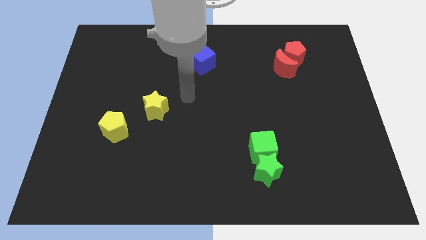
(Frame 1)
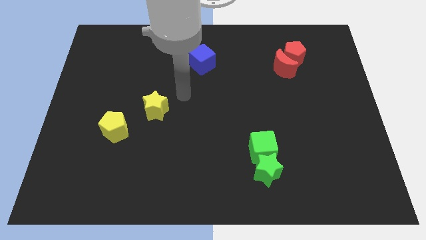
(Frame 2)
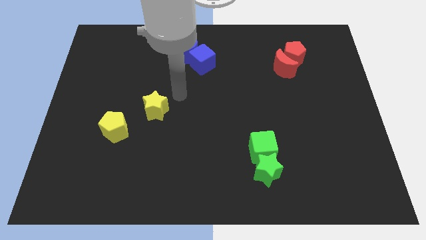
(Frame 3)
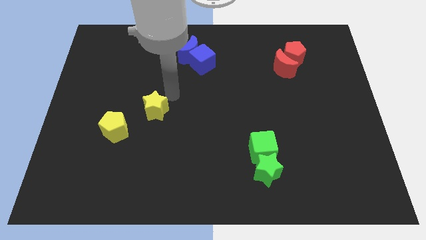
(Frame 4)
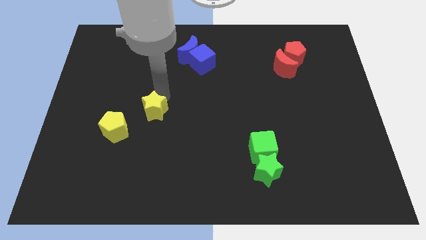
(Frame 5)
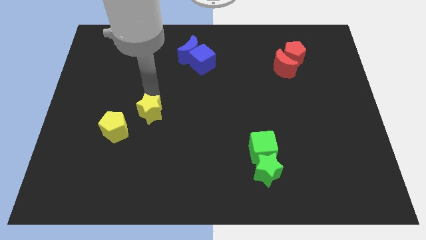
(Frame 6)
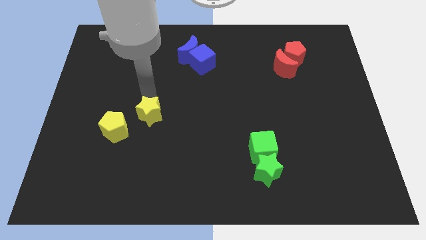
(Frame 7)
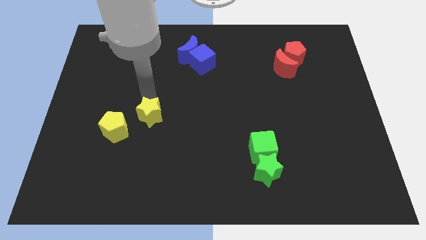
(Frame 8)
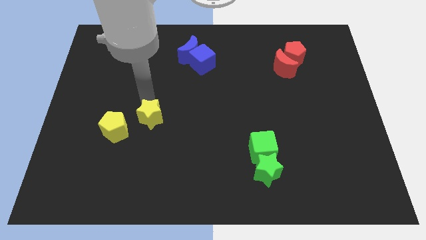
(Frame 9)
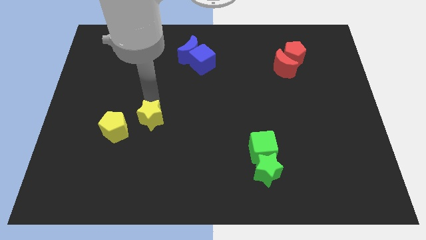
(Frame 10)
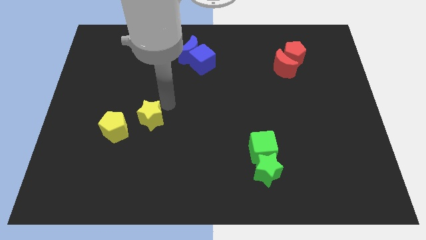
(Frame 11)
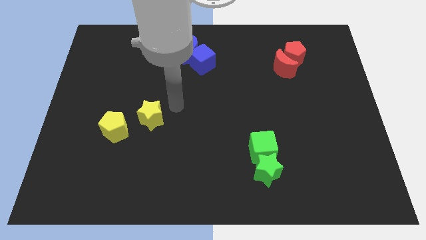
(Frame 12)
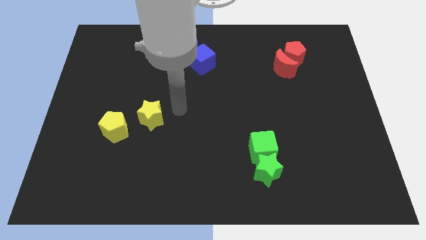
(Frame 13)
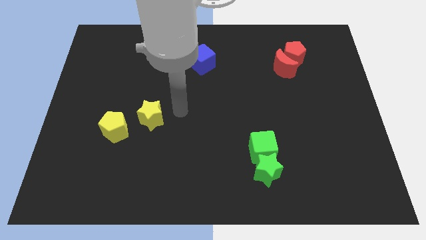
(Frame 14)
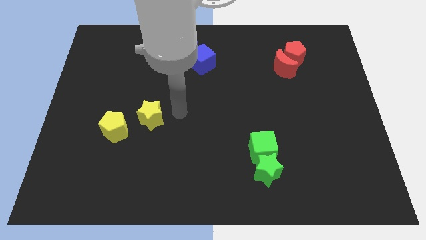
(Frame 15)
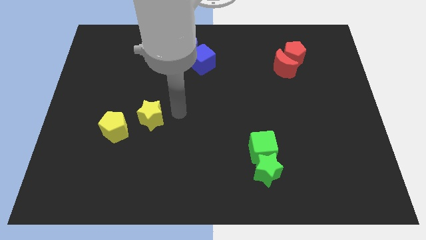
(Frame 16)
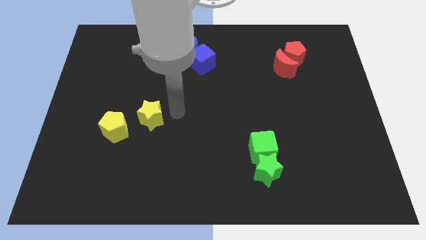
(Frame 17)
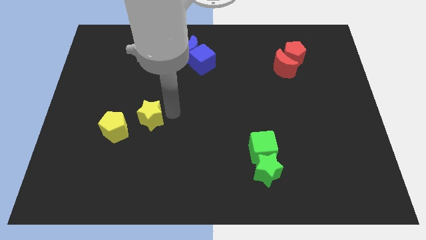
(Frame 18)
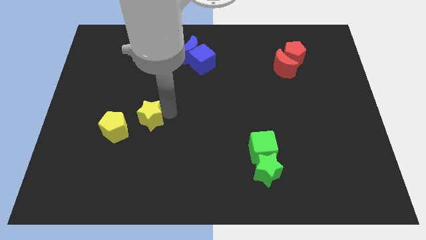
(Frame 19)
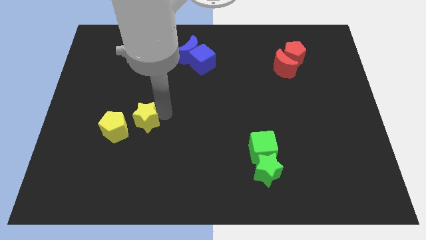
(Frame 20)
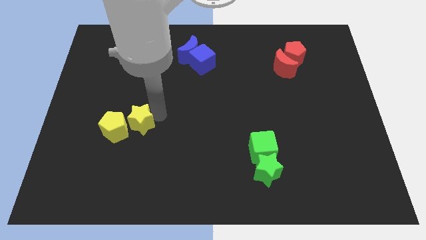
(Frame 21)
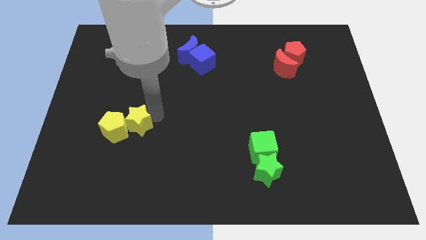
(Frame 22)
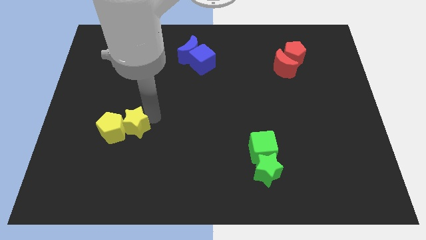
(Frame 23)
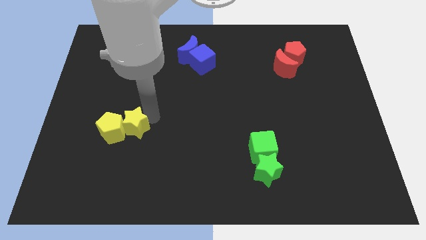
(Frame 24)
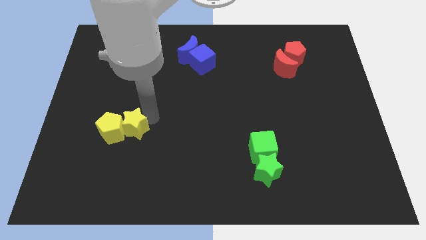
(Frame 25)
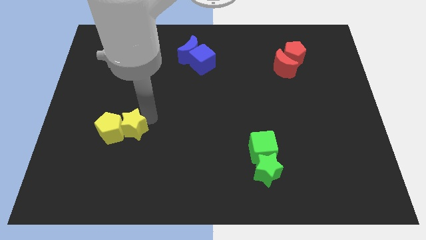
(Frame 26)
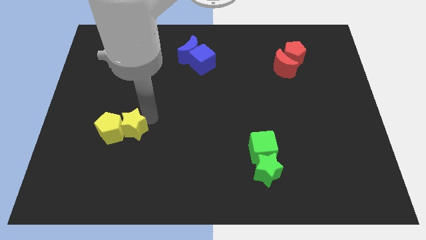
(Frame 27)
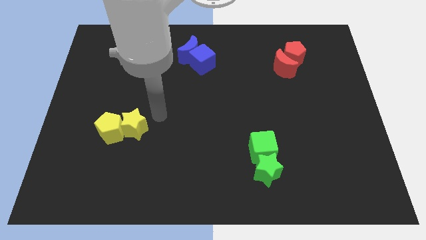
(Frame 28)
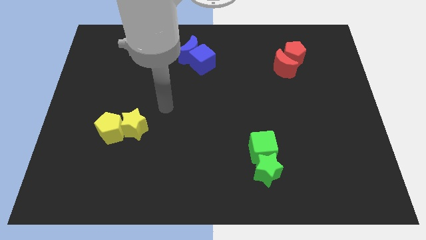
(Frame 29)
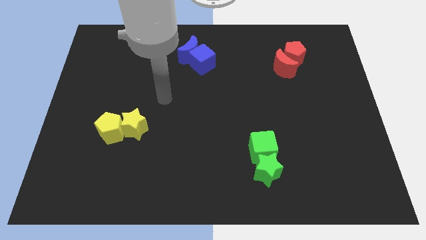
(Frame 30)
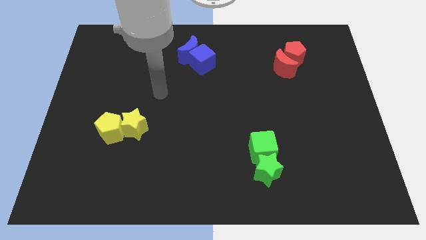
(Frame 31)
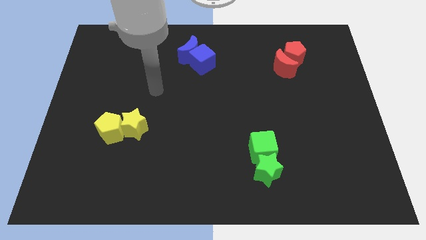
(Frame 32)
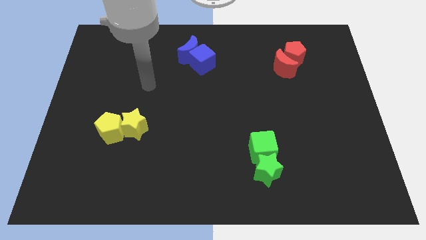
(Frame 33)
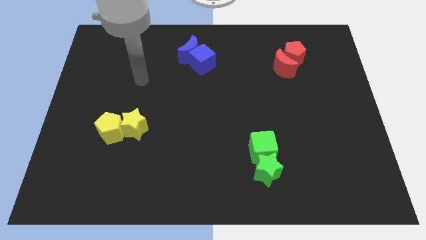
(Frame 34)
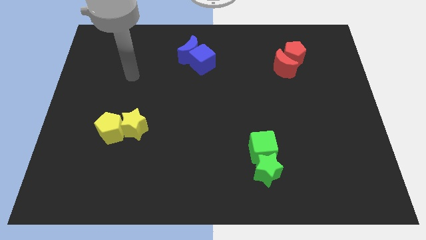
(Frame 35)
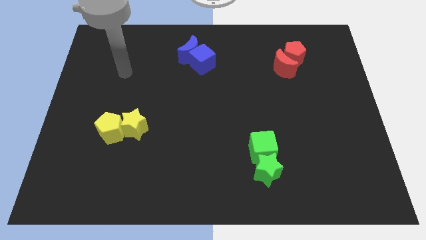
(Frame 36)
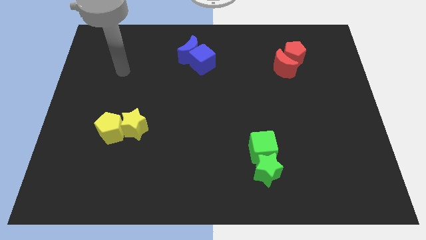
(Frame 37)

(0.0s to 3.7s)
push the yellow blocks towards the left side of the board

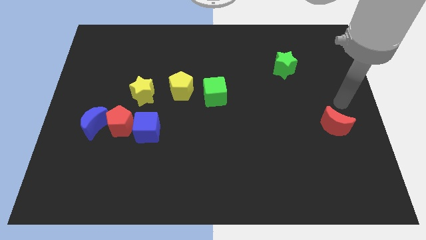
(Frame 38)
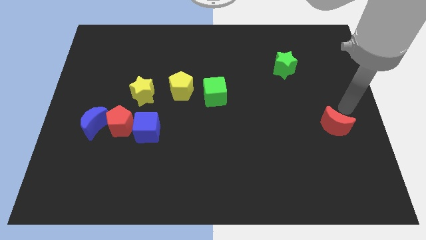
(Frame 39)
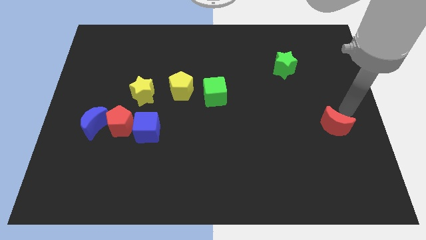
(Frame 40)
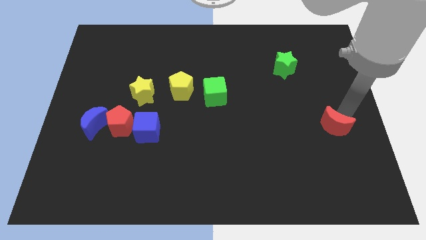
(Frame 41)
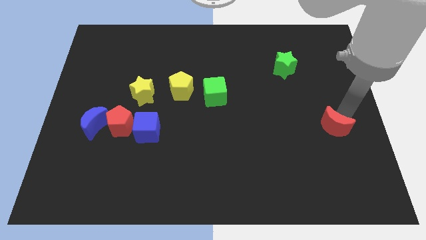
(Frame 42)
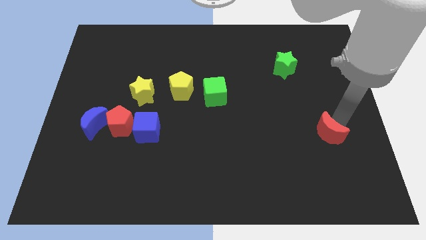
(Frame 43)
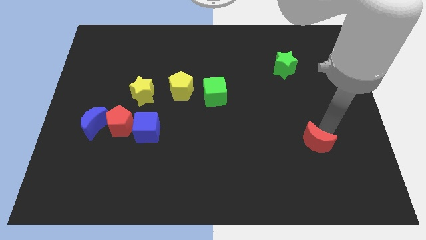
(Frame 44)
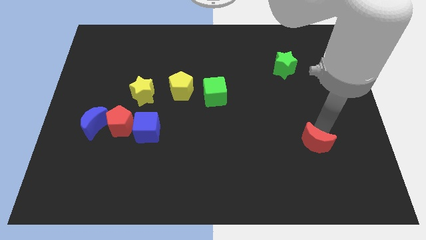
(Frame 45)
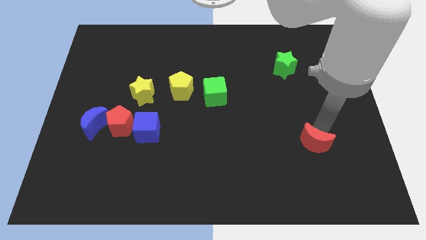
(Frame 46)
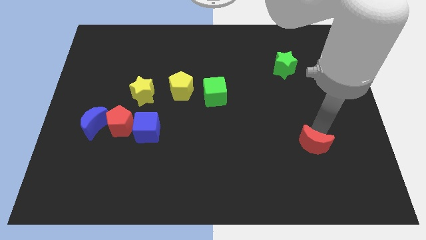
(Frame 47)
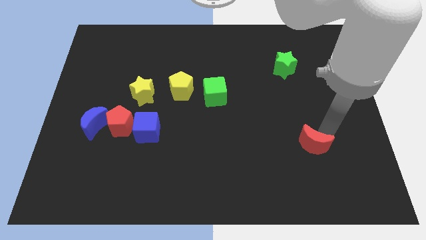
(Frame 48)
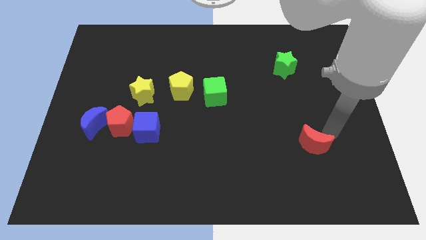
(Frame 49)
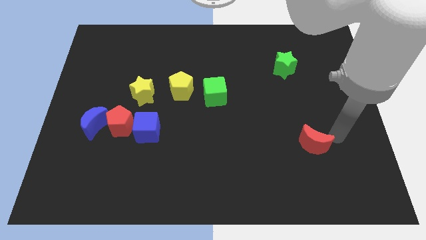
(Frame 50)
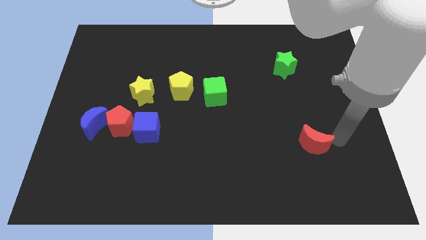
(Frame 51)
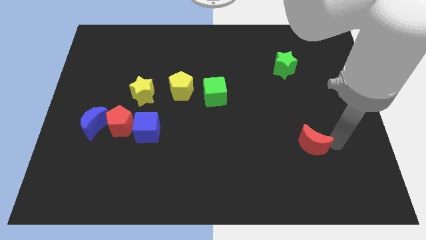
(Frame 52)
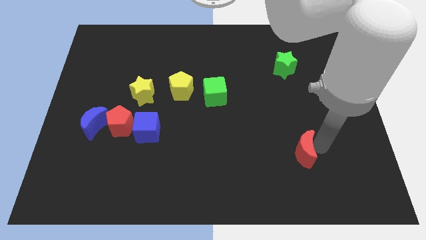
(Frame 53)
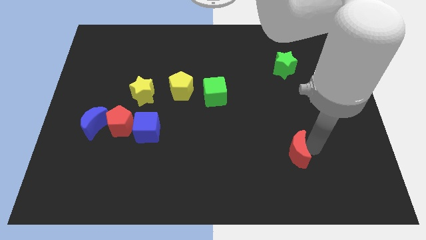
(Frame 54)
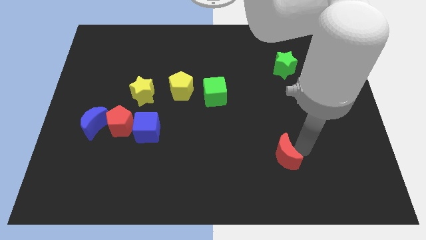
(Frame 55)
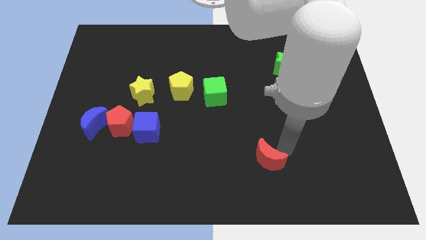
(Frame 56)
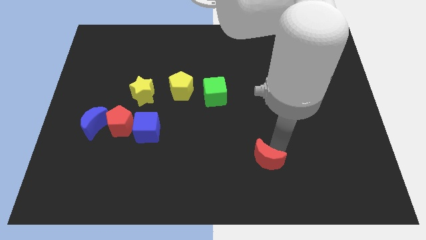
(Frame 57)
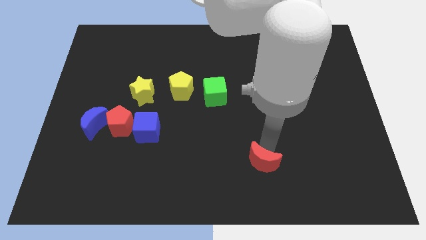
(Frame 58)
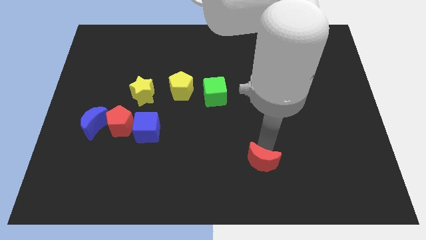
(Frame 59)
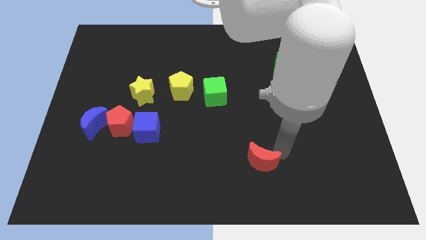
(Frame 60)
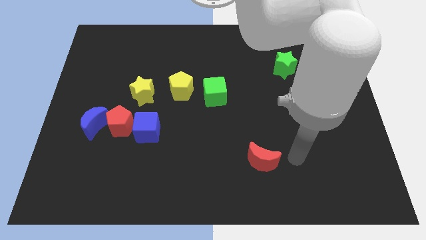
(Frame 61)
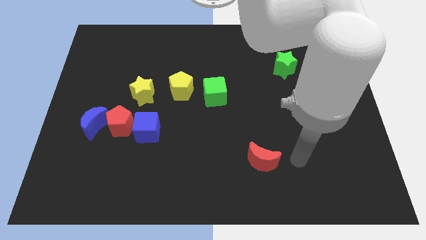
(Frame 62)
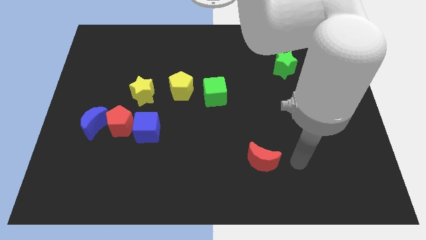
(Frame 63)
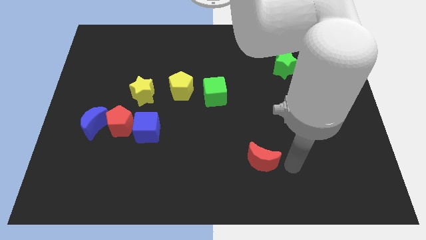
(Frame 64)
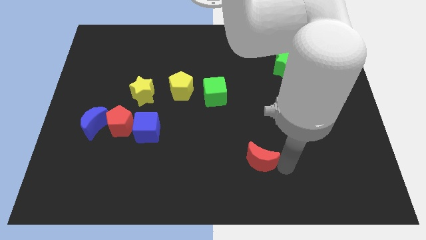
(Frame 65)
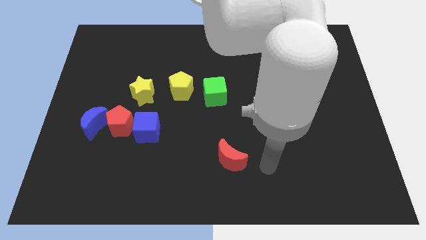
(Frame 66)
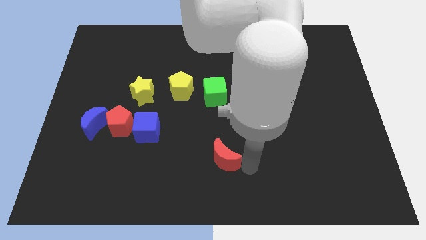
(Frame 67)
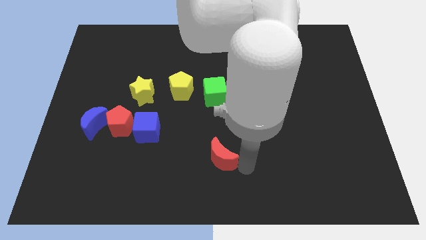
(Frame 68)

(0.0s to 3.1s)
move the red moon below the green cube

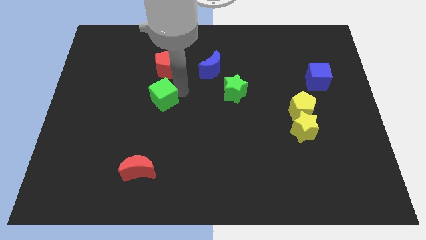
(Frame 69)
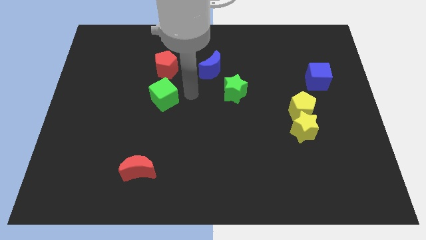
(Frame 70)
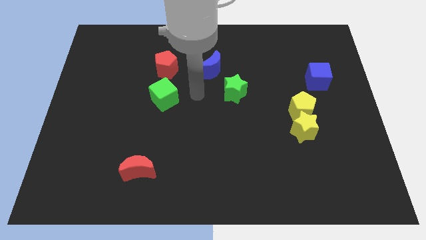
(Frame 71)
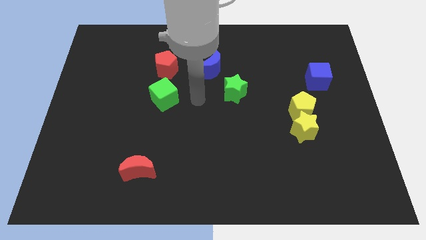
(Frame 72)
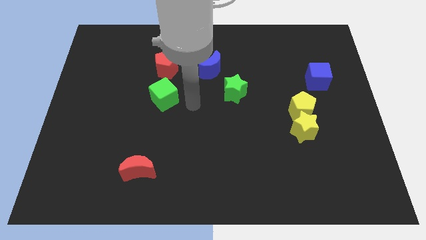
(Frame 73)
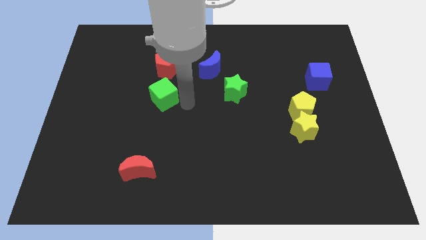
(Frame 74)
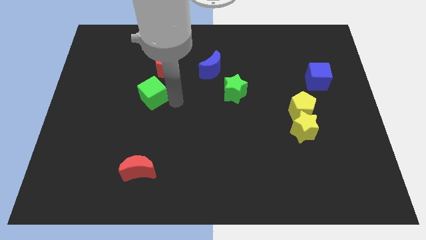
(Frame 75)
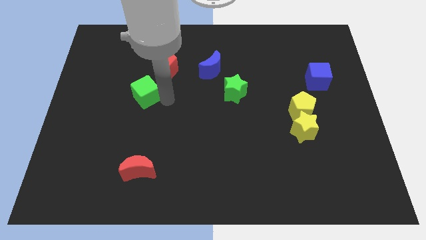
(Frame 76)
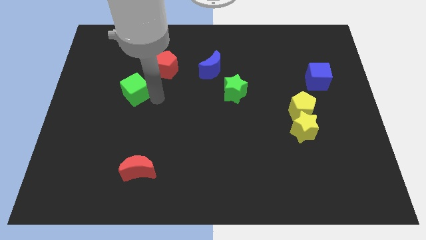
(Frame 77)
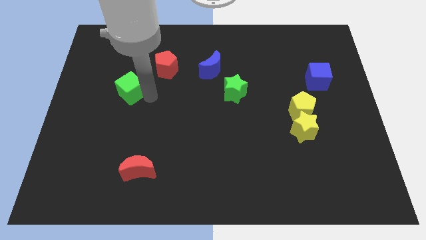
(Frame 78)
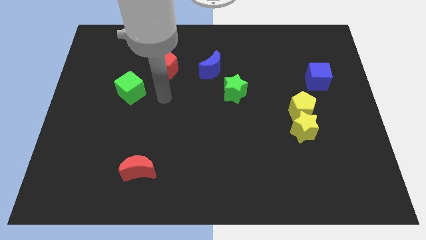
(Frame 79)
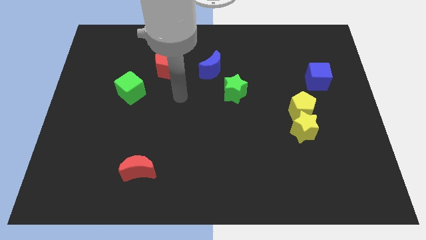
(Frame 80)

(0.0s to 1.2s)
slide the green cube slightly to the left

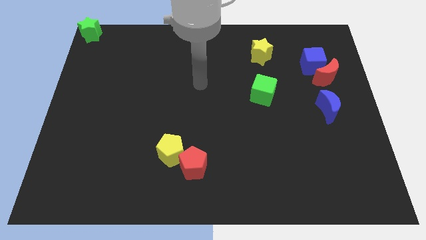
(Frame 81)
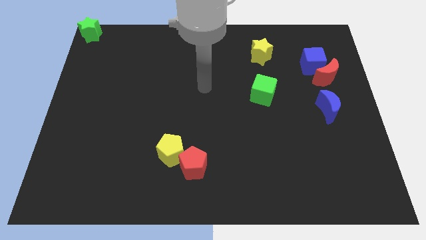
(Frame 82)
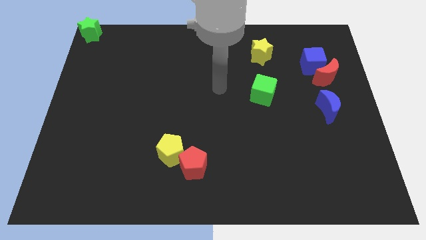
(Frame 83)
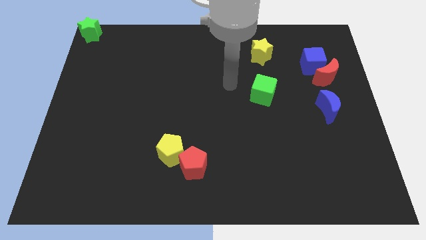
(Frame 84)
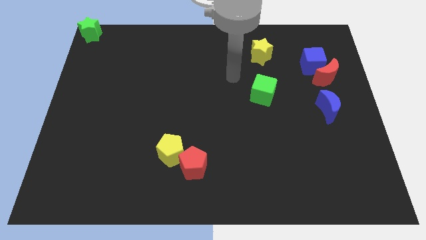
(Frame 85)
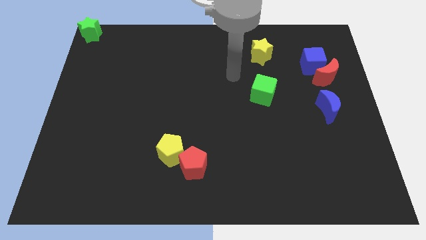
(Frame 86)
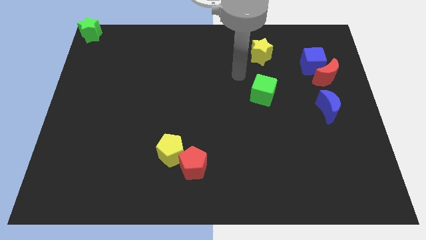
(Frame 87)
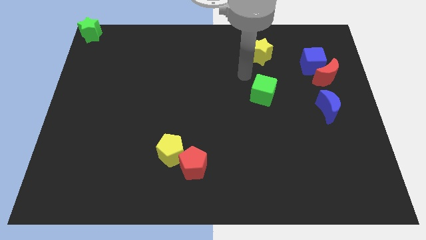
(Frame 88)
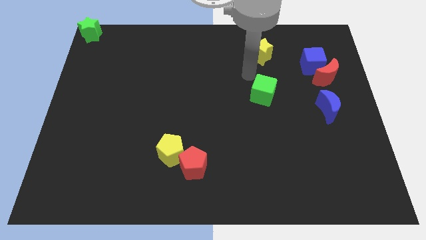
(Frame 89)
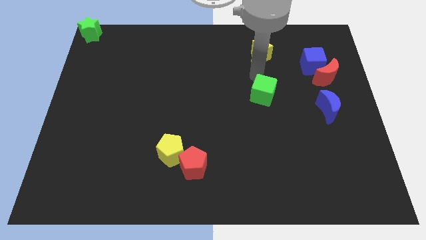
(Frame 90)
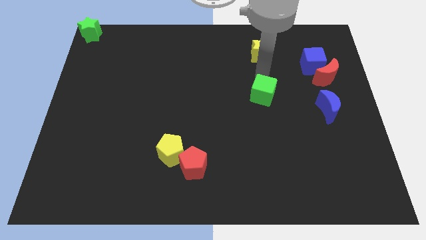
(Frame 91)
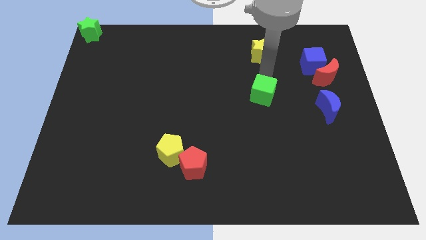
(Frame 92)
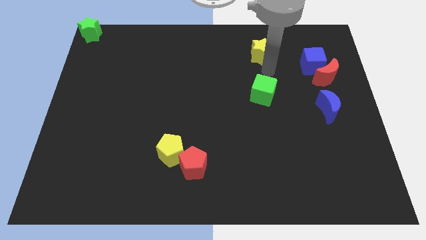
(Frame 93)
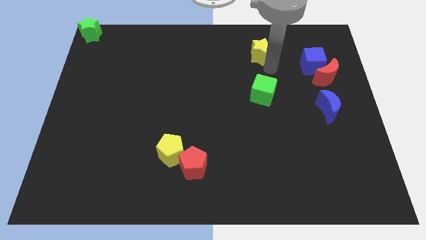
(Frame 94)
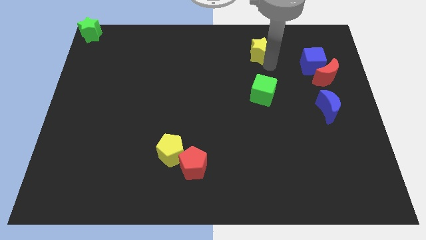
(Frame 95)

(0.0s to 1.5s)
push hand on the bottom of yellow star
